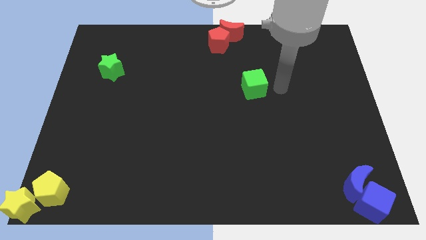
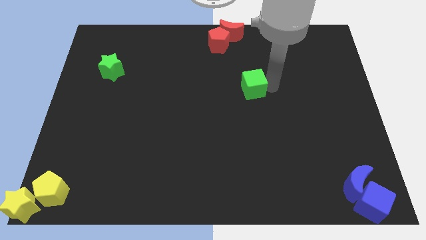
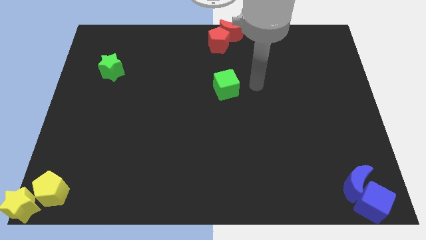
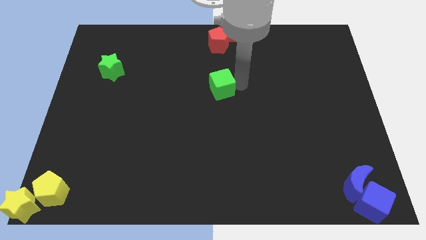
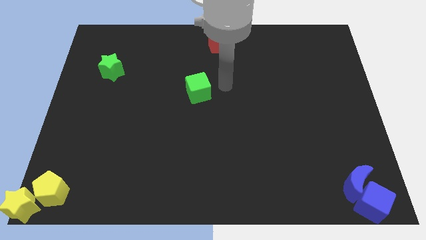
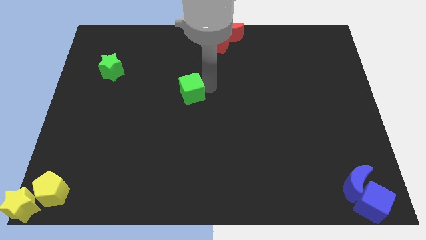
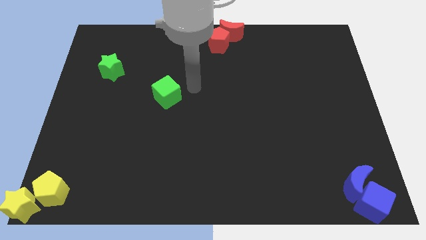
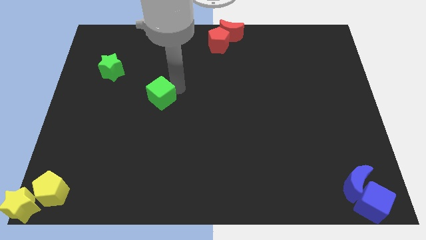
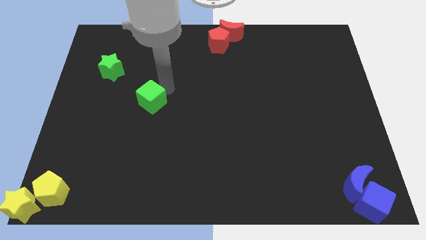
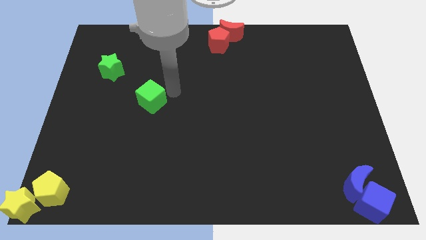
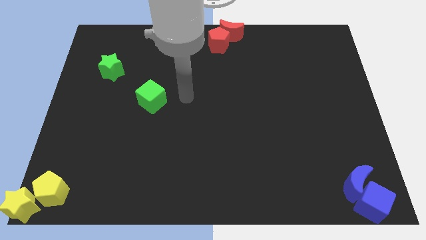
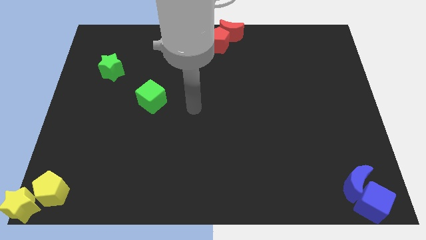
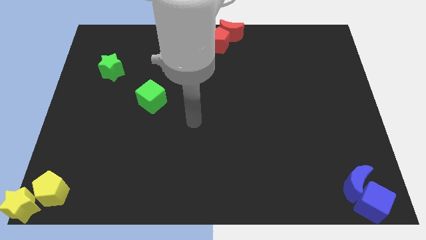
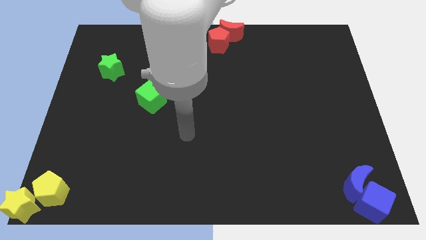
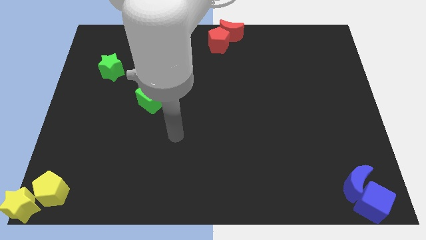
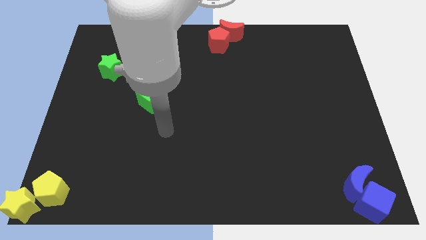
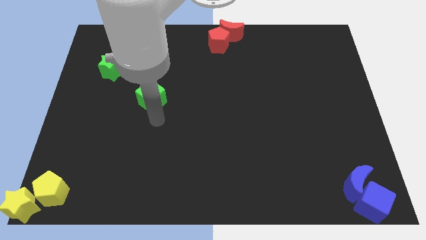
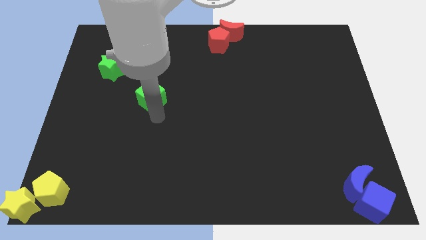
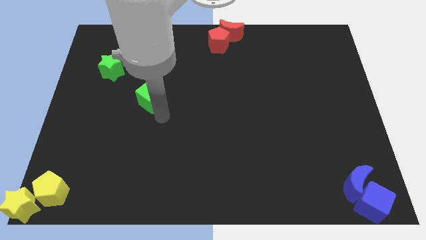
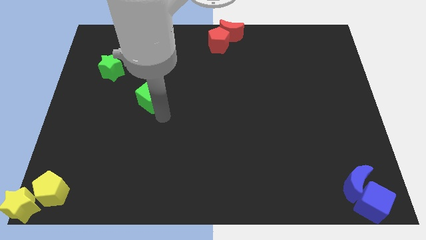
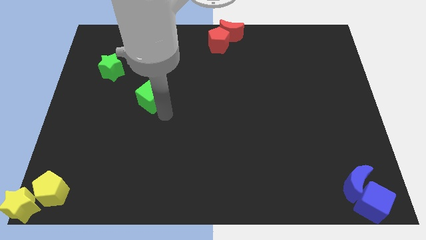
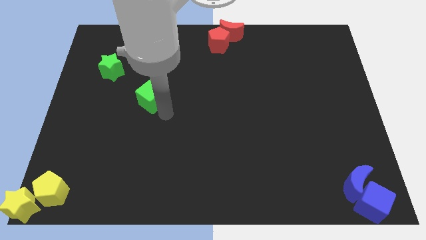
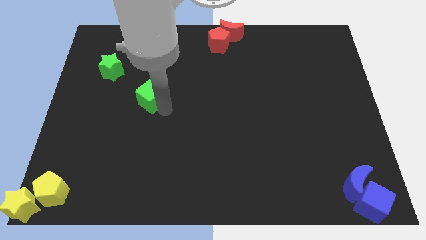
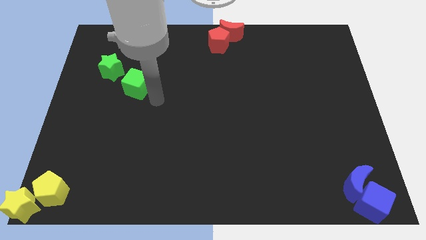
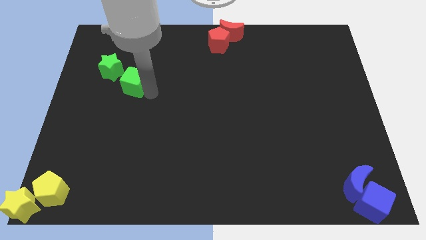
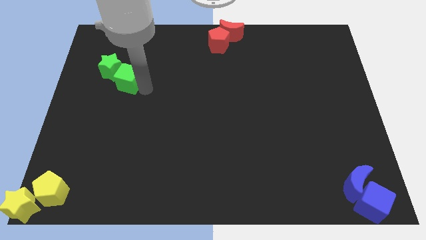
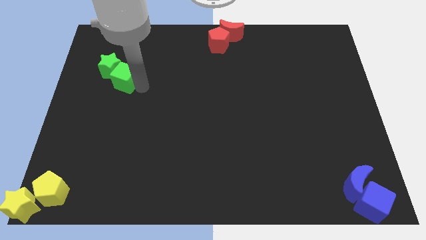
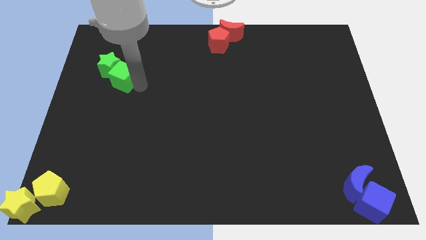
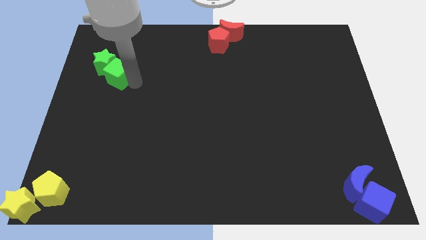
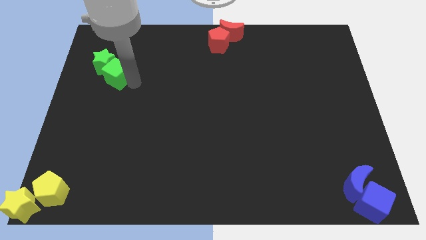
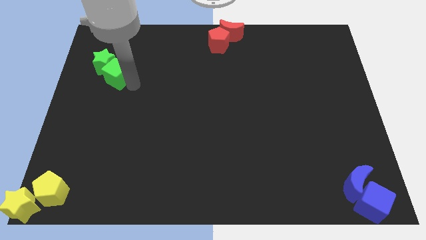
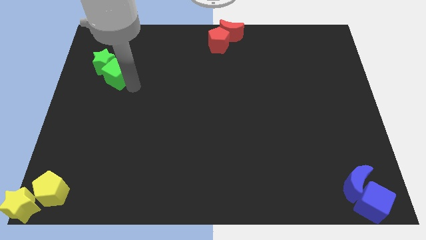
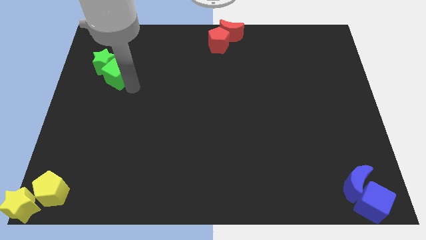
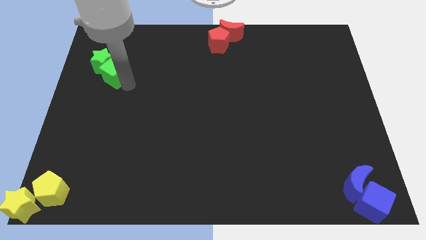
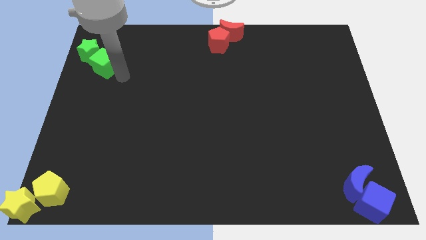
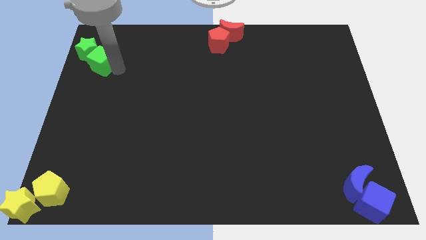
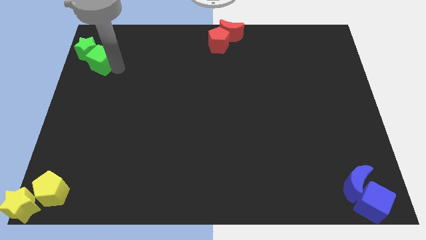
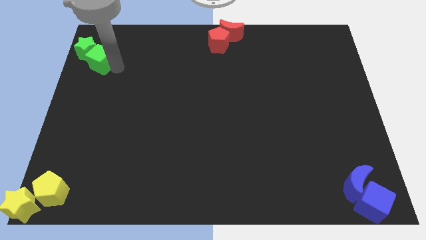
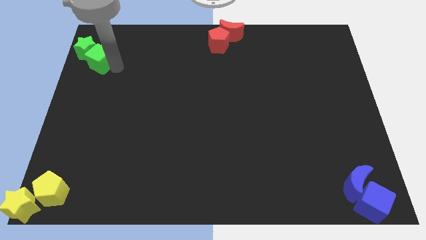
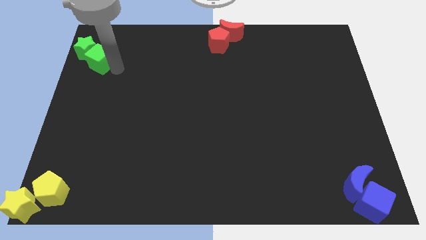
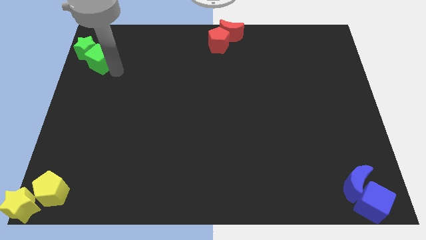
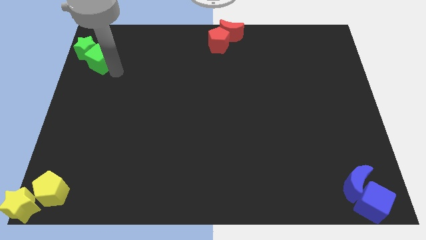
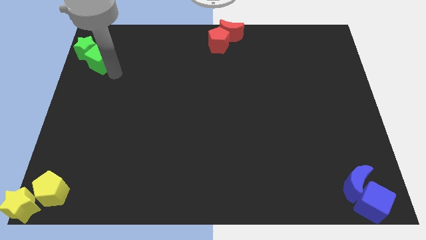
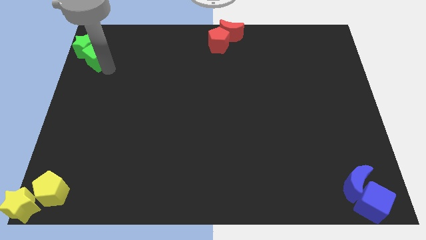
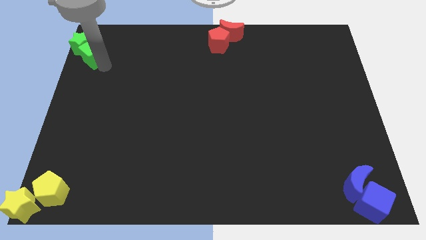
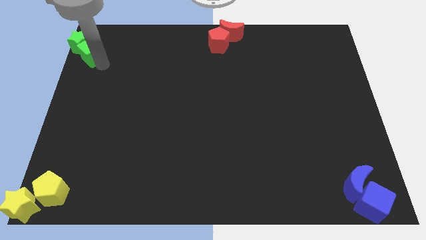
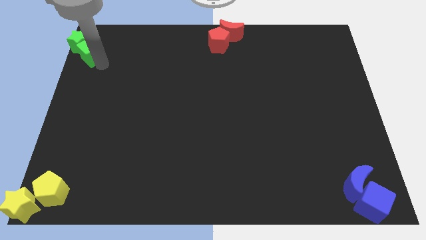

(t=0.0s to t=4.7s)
push the green cube into the green star

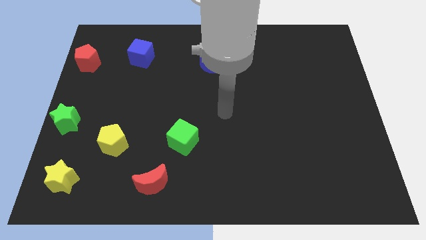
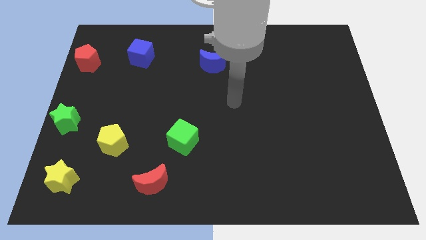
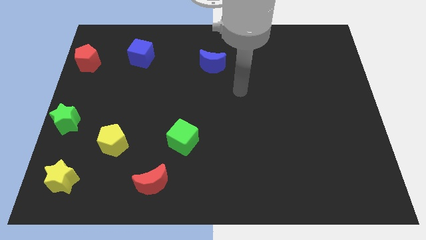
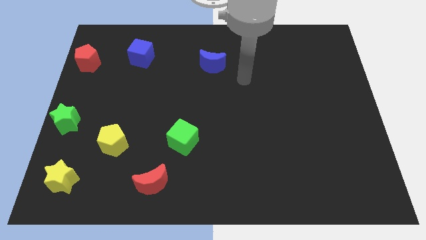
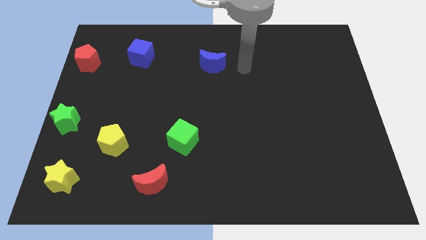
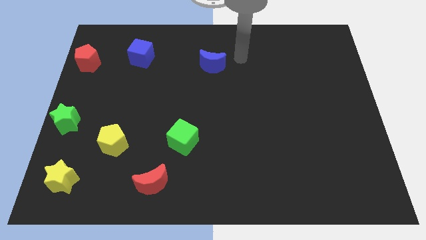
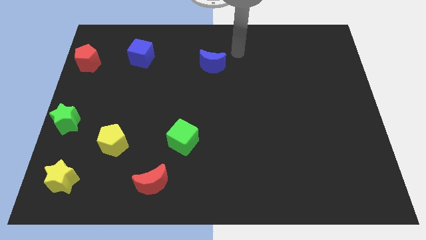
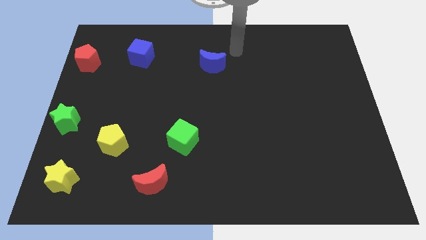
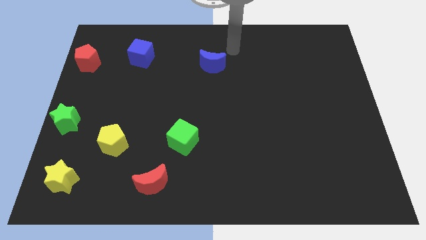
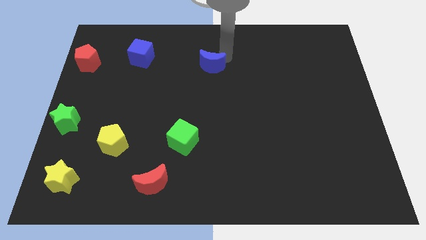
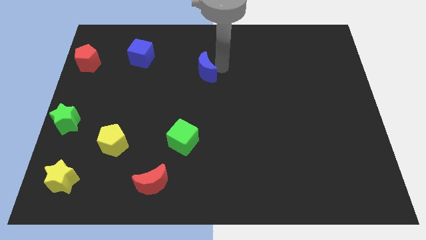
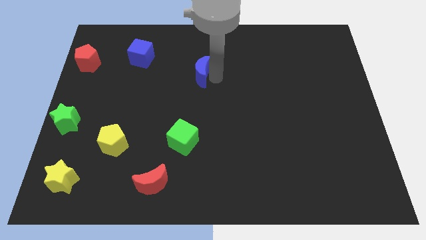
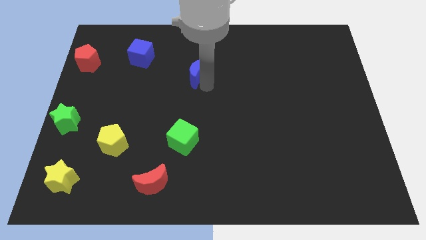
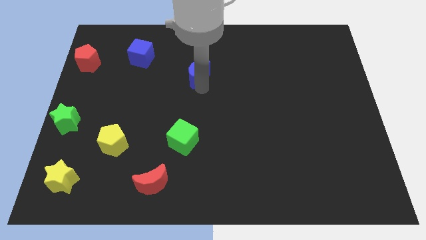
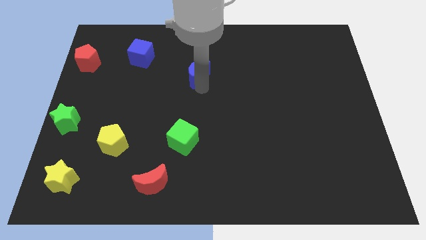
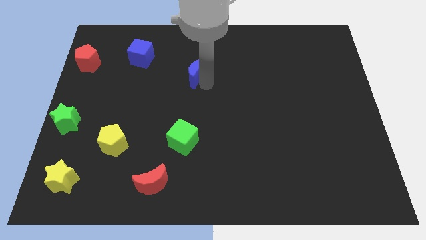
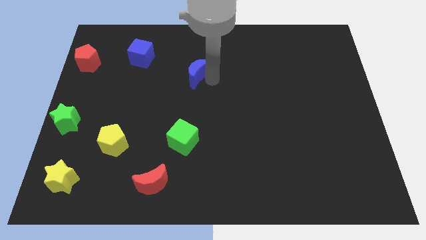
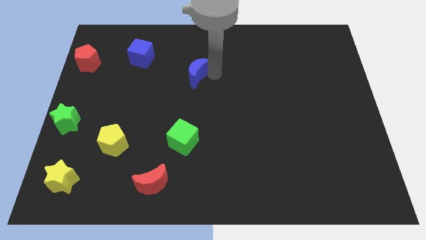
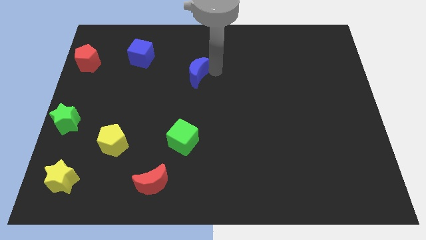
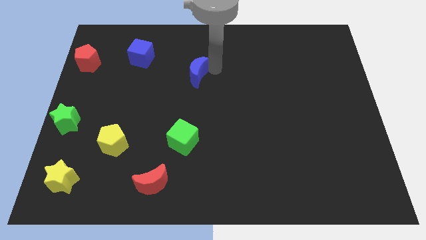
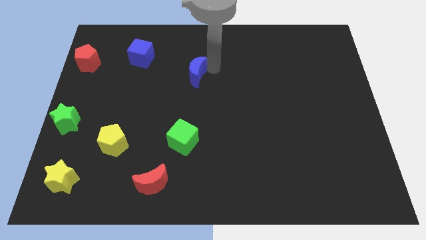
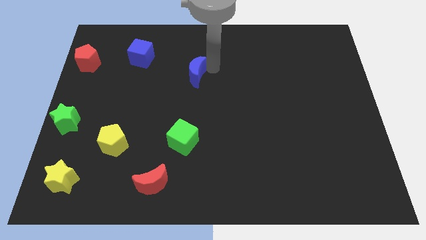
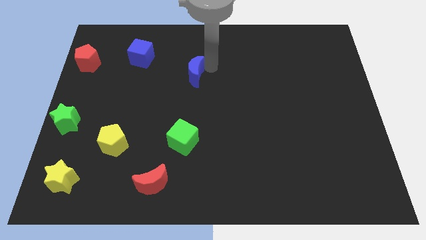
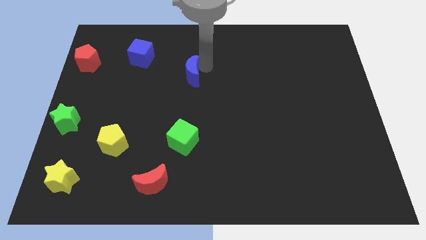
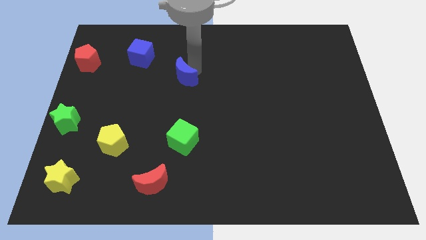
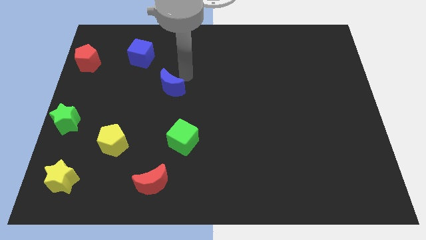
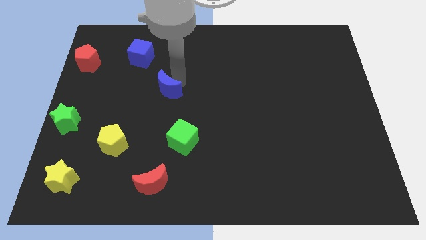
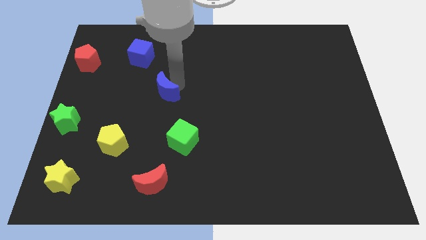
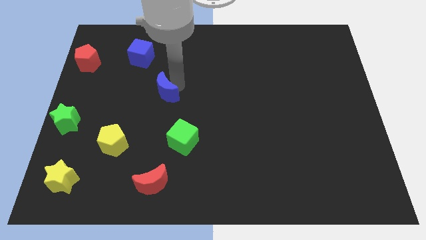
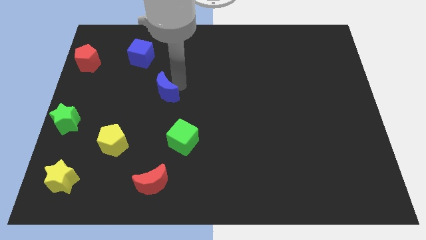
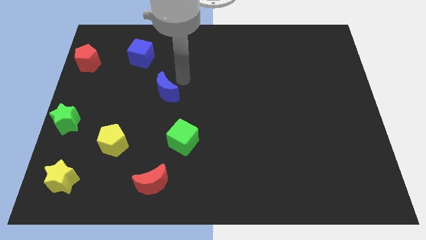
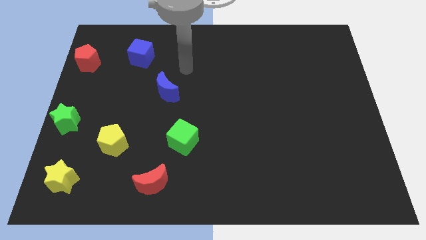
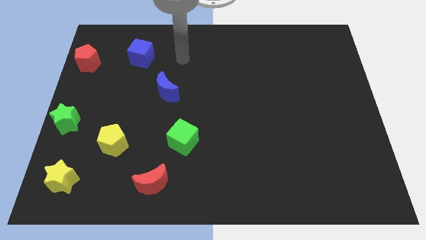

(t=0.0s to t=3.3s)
place the blue crescent diagonally below the bottom right side of the blue cube

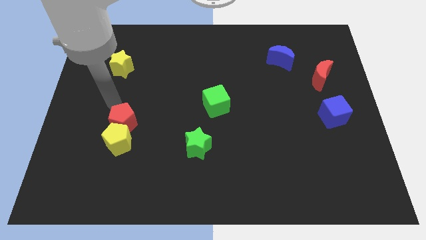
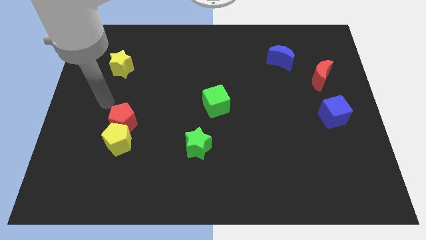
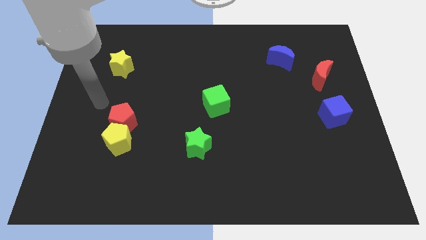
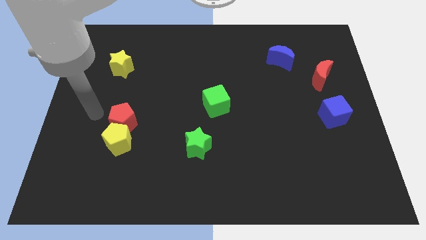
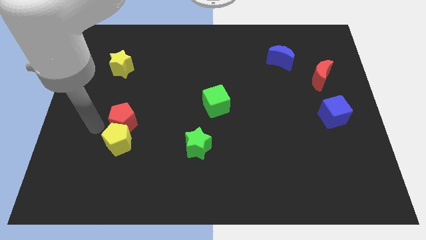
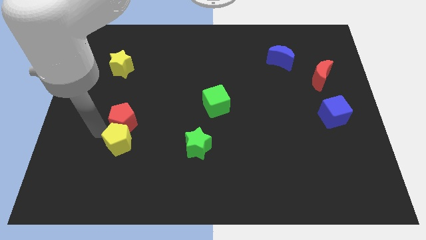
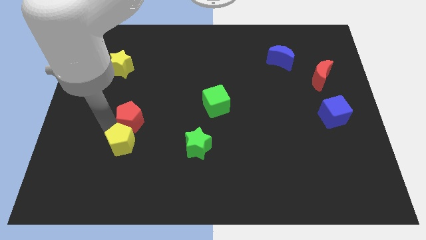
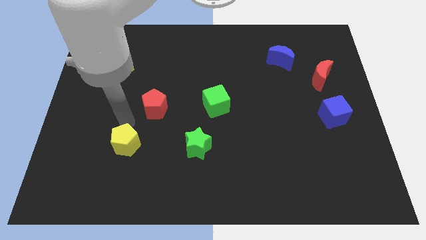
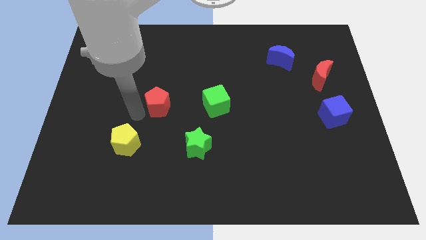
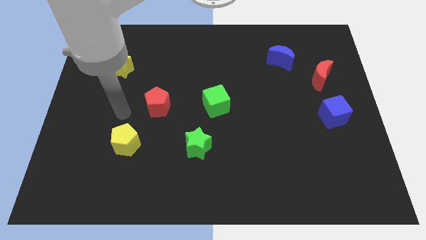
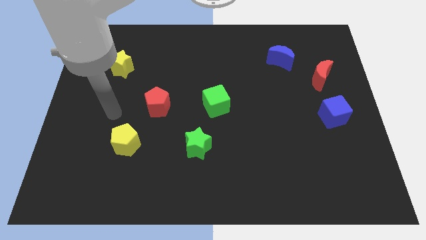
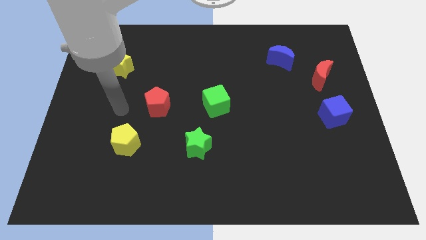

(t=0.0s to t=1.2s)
separate the red pentagon and yellow pentagon
